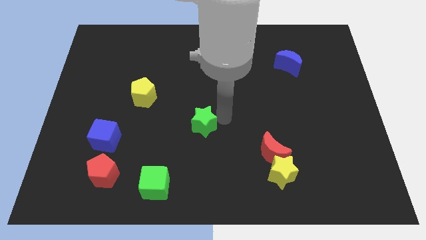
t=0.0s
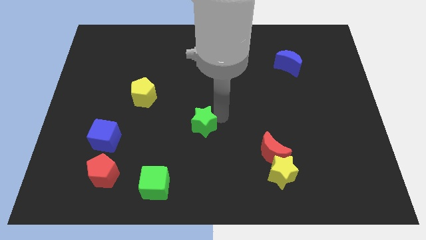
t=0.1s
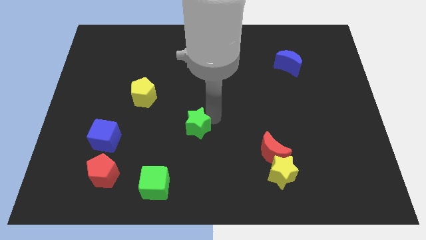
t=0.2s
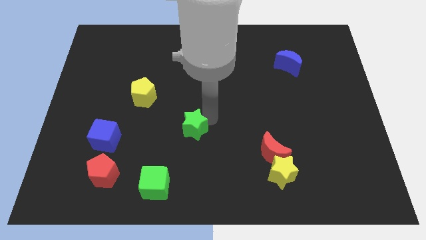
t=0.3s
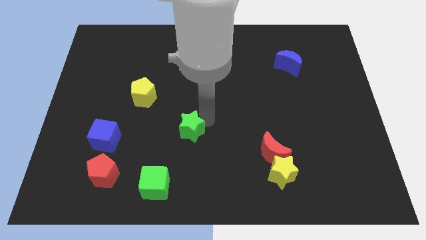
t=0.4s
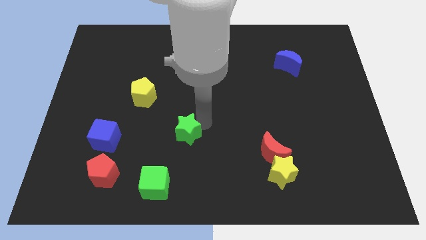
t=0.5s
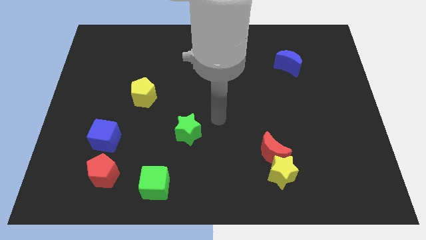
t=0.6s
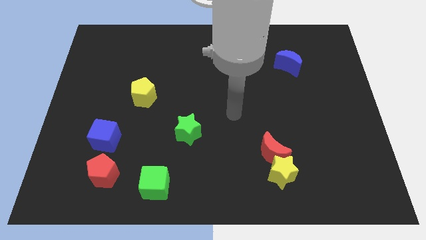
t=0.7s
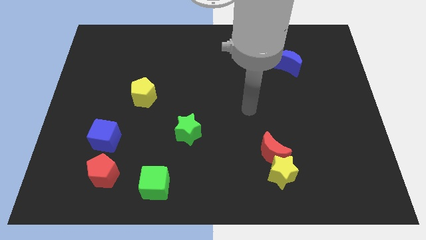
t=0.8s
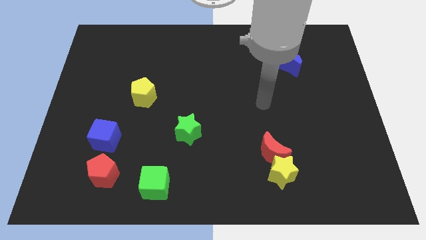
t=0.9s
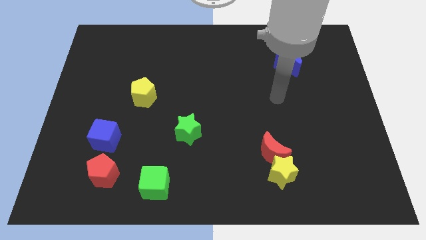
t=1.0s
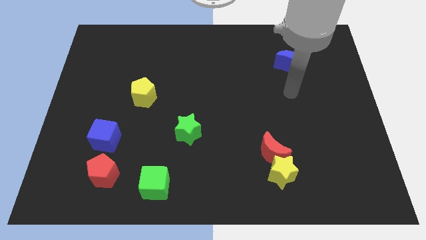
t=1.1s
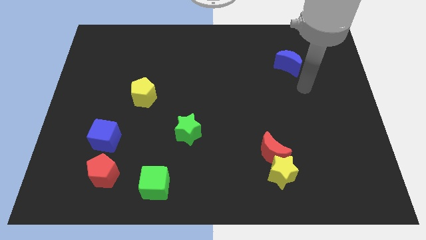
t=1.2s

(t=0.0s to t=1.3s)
slide the green star diagonally on the top right side of the green cube

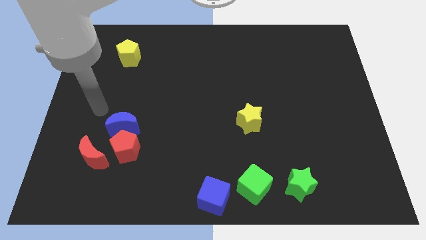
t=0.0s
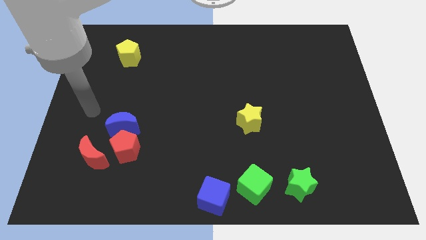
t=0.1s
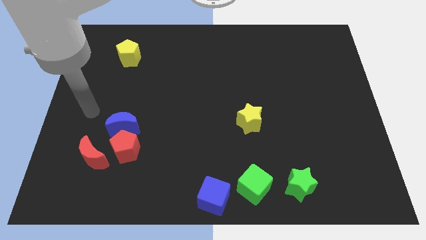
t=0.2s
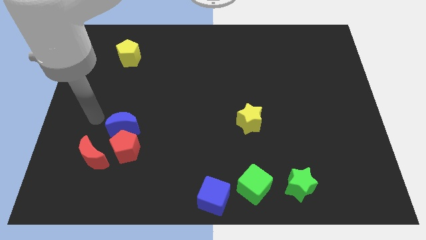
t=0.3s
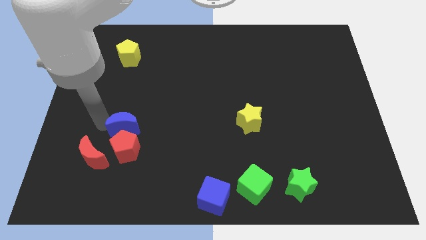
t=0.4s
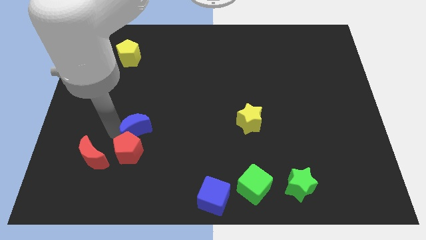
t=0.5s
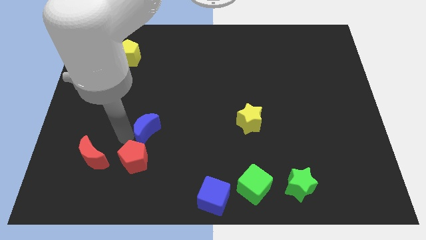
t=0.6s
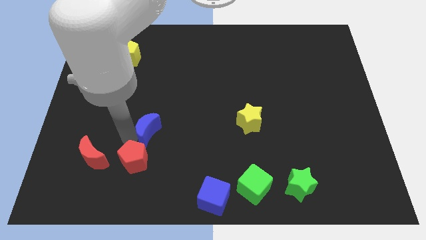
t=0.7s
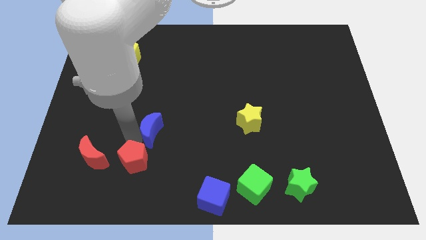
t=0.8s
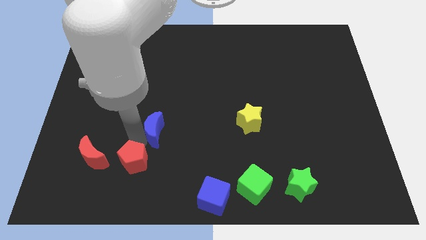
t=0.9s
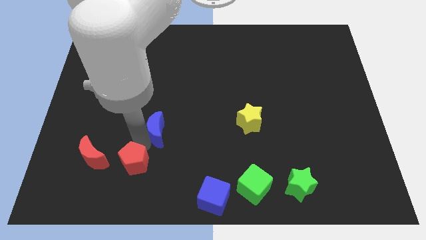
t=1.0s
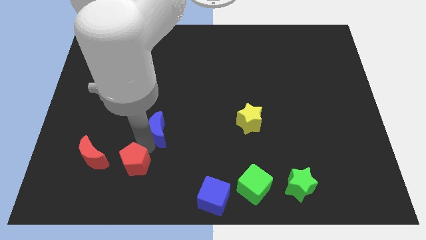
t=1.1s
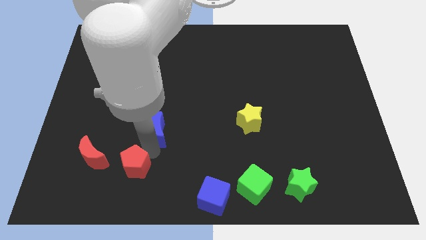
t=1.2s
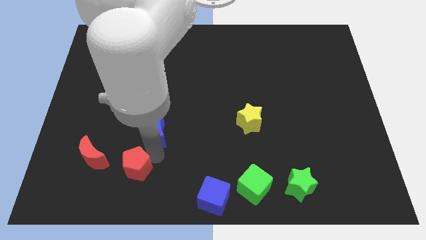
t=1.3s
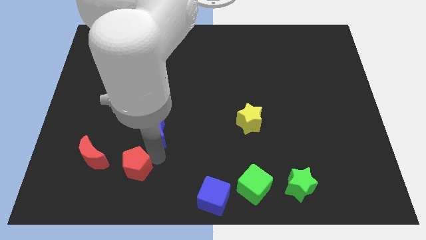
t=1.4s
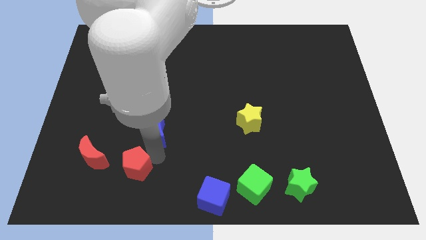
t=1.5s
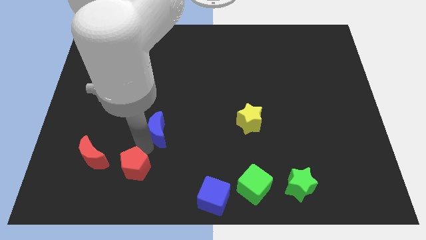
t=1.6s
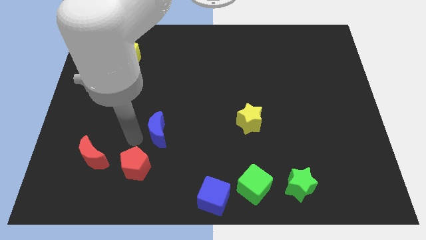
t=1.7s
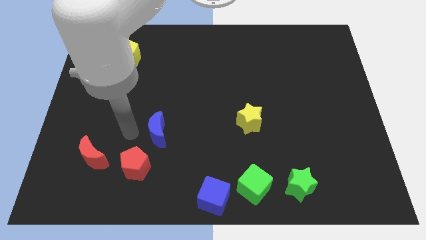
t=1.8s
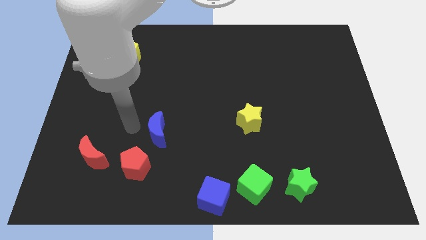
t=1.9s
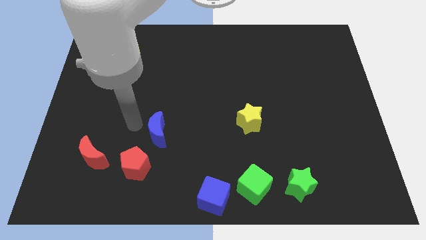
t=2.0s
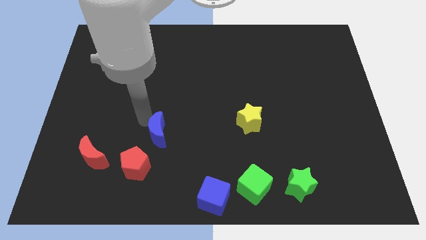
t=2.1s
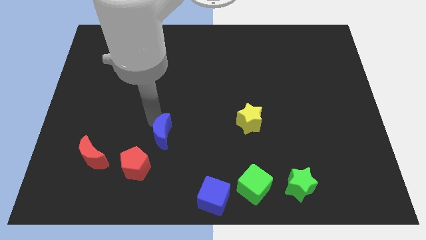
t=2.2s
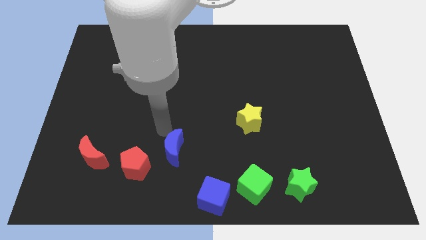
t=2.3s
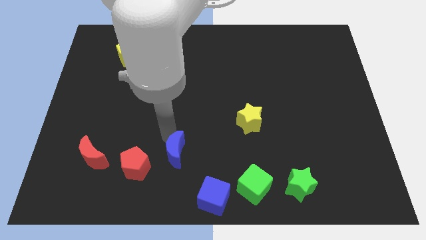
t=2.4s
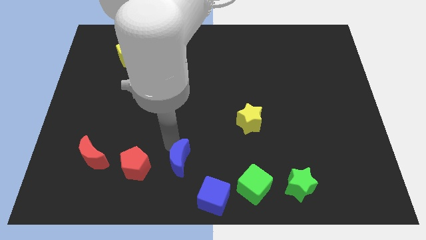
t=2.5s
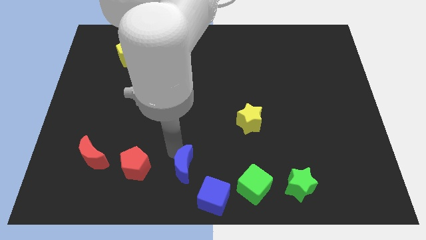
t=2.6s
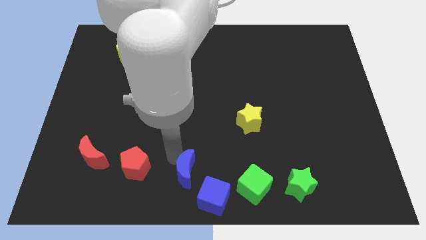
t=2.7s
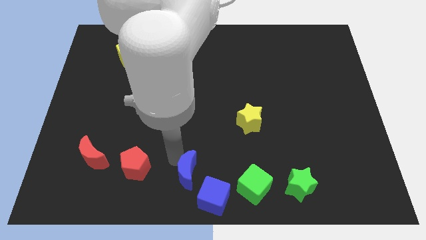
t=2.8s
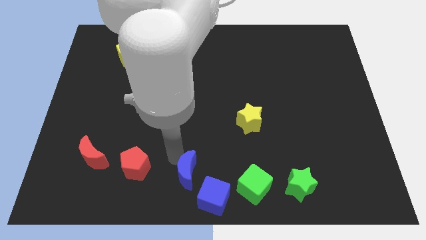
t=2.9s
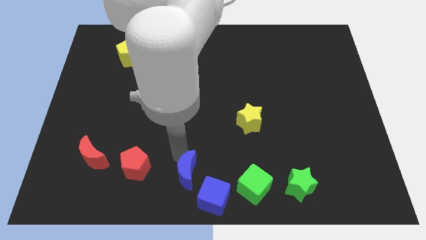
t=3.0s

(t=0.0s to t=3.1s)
separate the blue moon from the red pentagon

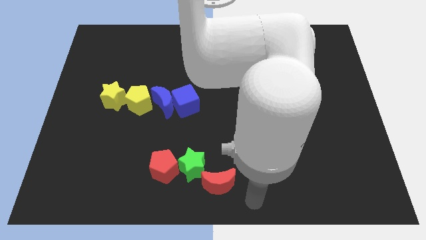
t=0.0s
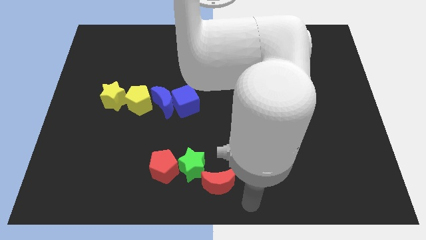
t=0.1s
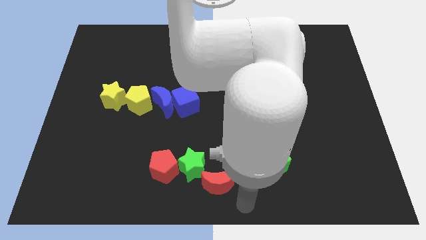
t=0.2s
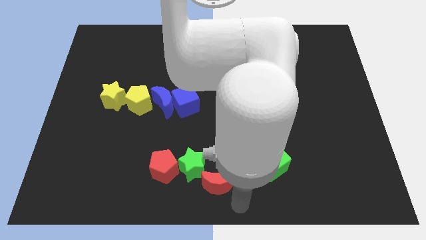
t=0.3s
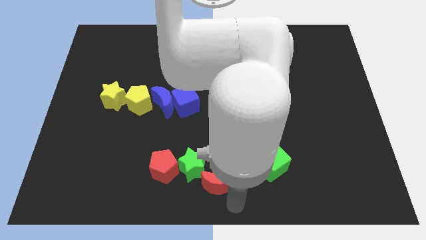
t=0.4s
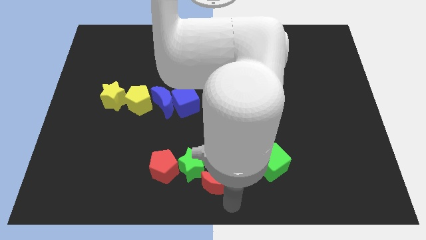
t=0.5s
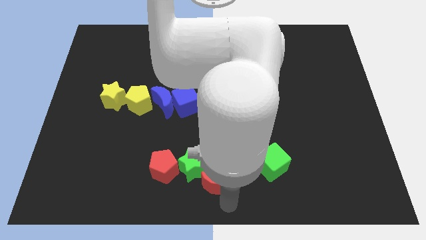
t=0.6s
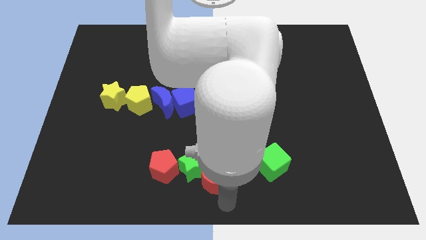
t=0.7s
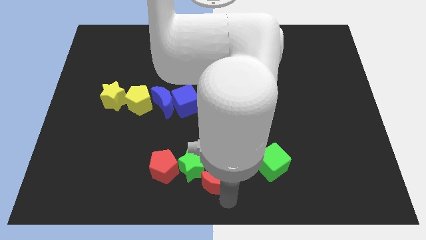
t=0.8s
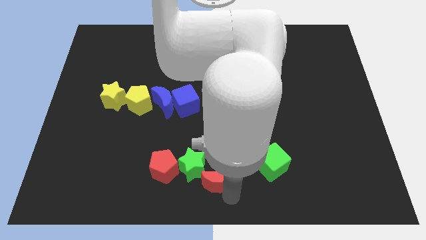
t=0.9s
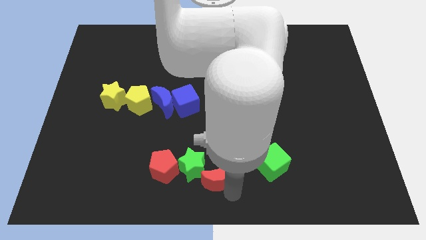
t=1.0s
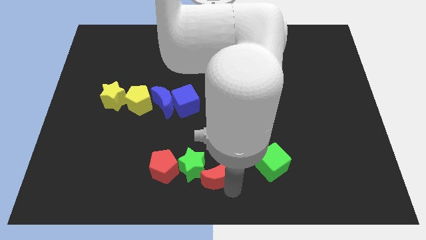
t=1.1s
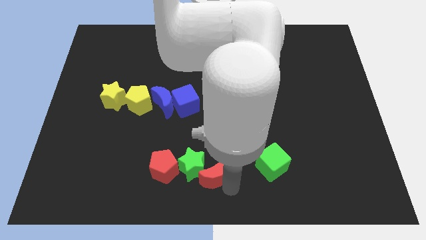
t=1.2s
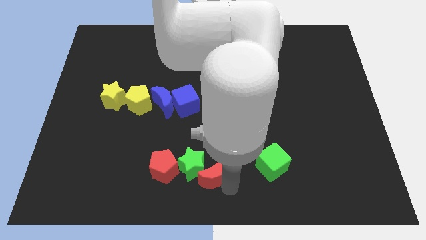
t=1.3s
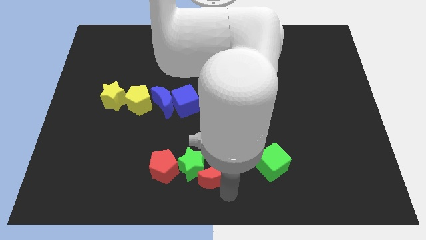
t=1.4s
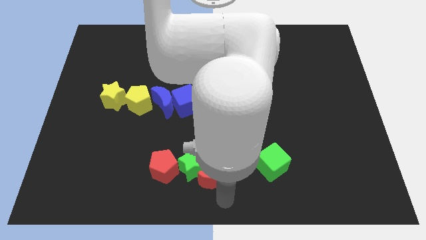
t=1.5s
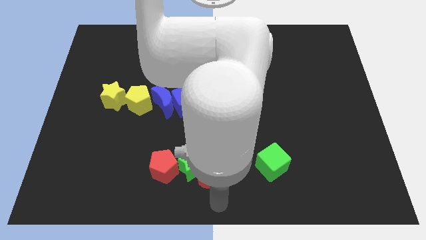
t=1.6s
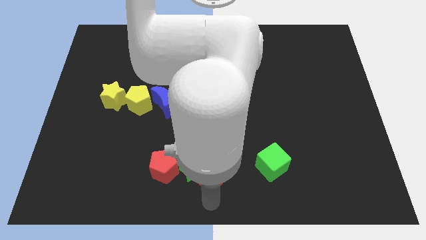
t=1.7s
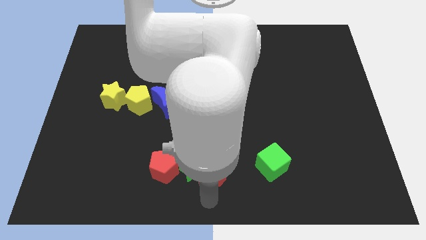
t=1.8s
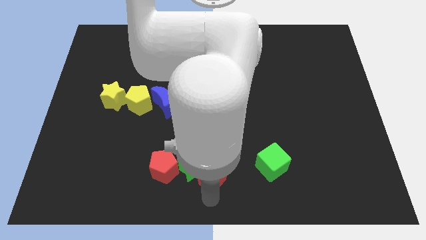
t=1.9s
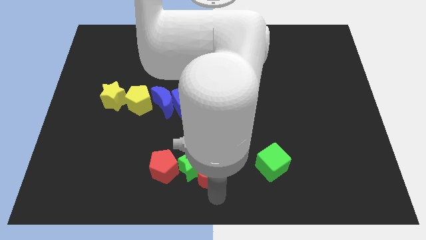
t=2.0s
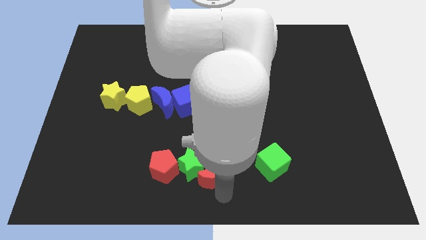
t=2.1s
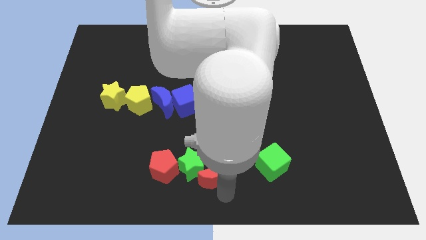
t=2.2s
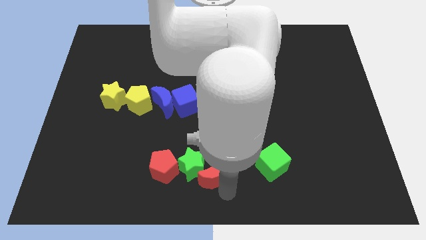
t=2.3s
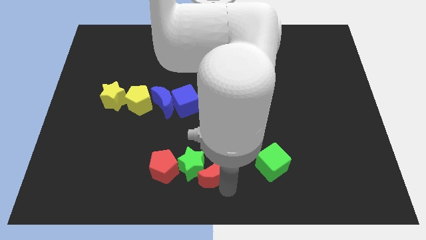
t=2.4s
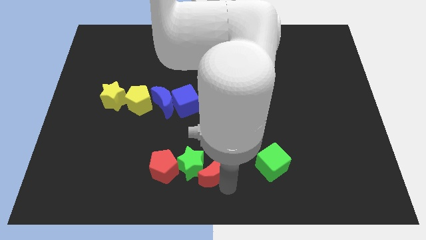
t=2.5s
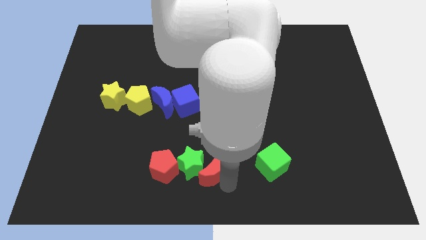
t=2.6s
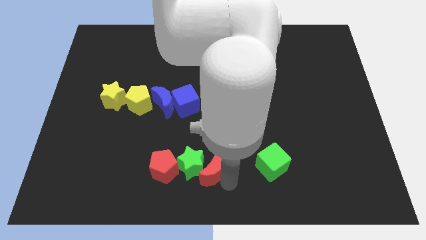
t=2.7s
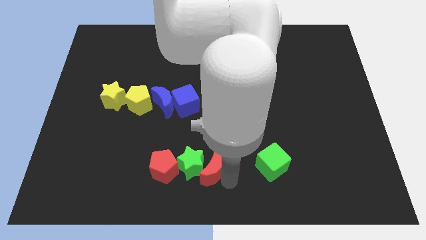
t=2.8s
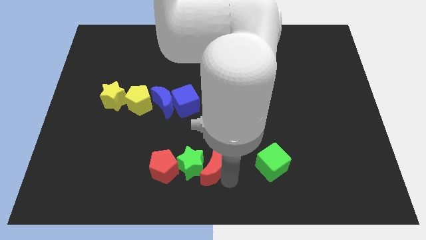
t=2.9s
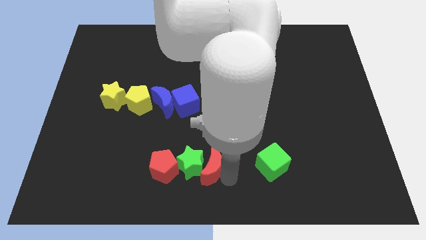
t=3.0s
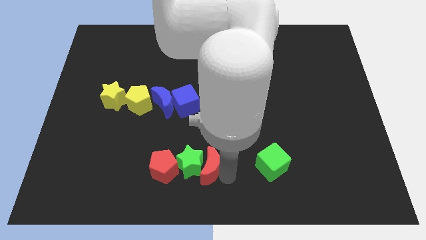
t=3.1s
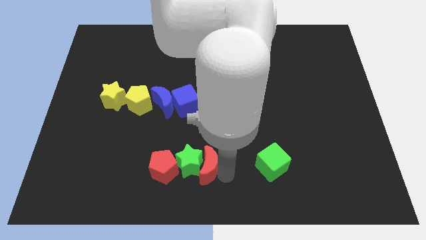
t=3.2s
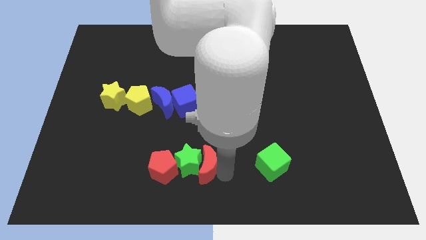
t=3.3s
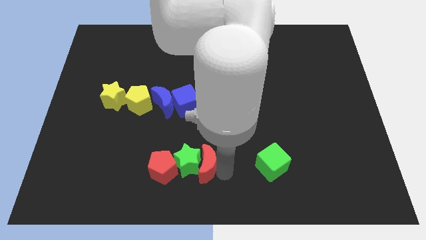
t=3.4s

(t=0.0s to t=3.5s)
move the red crescent to the right of green star horizontally

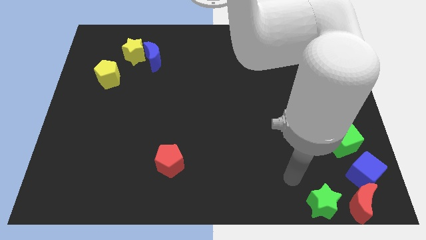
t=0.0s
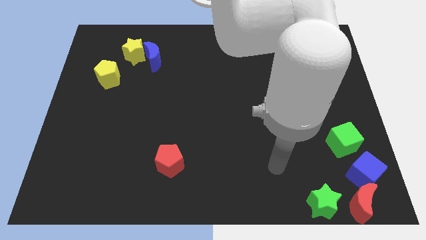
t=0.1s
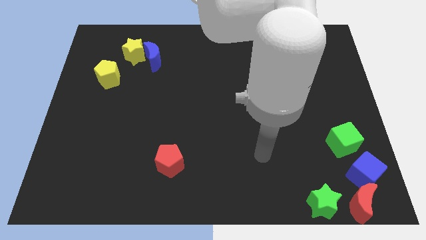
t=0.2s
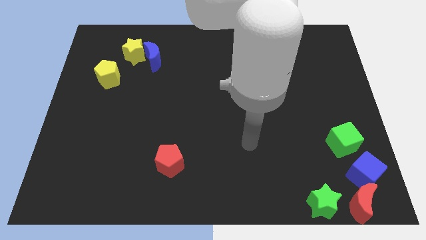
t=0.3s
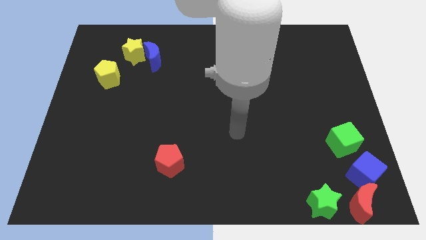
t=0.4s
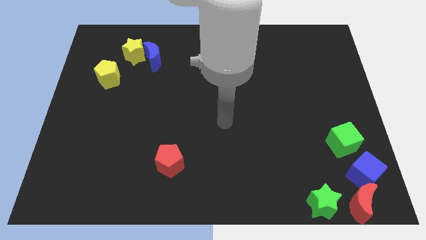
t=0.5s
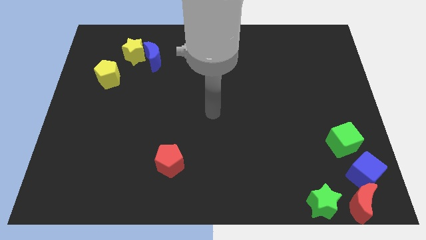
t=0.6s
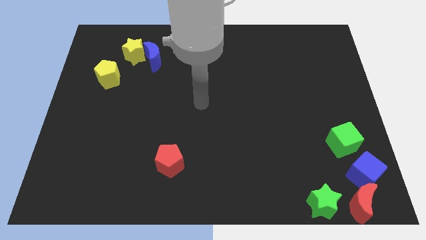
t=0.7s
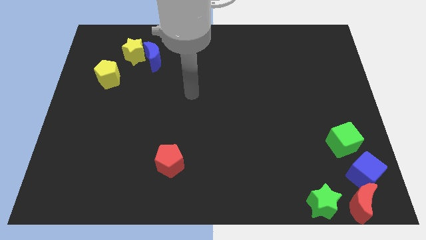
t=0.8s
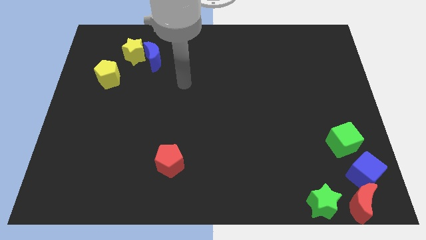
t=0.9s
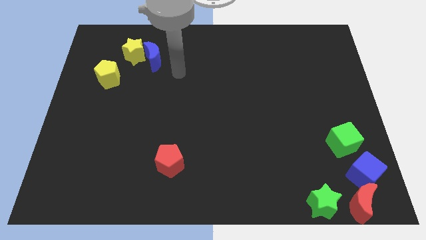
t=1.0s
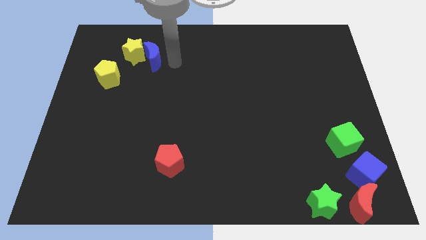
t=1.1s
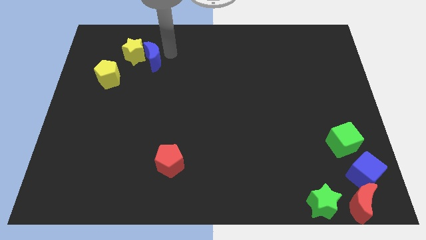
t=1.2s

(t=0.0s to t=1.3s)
point the arm to the right of the blue crescent
